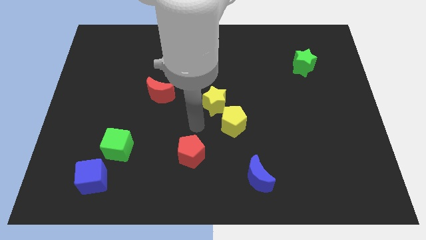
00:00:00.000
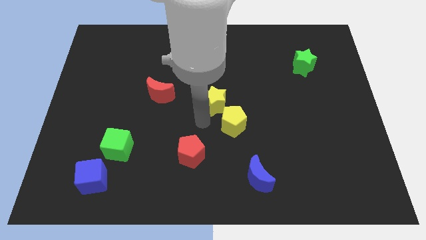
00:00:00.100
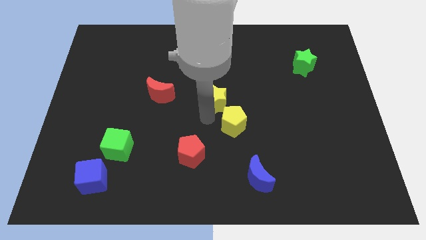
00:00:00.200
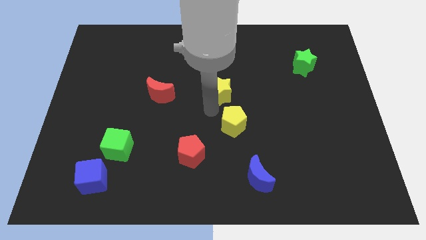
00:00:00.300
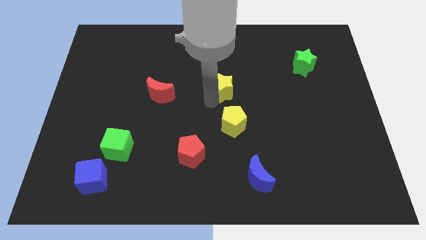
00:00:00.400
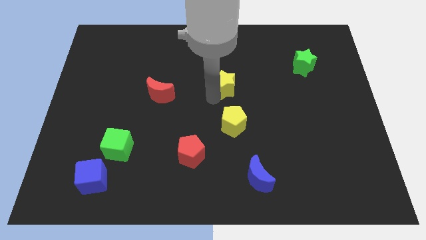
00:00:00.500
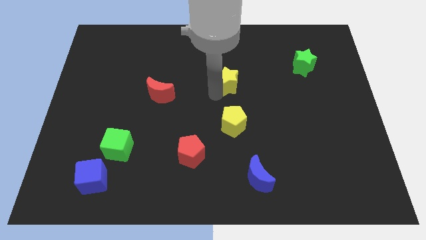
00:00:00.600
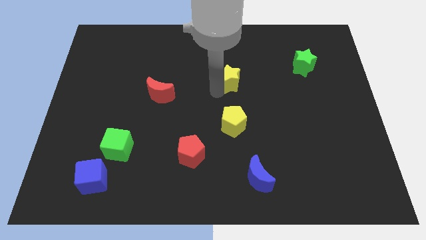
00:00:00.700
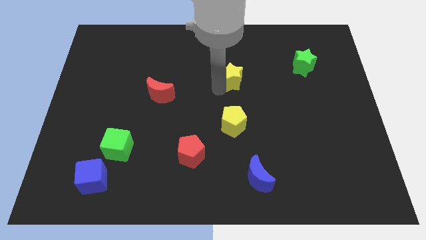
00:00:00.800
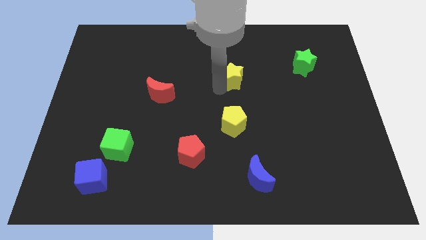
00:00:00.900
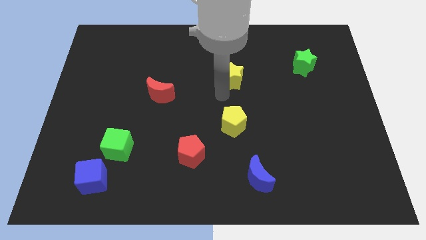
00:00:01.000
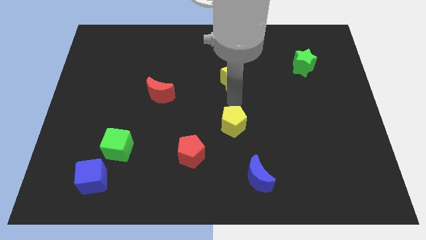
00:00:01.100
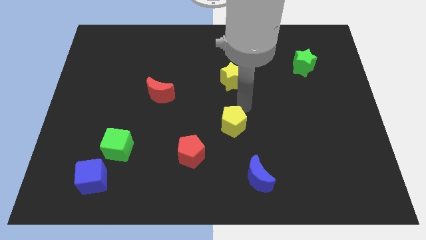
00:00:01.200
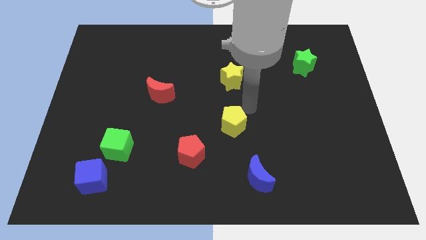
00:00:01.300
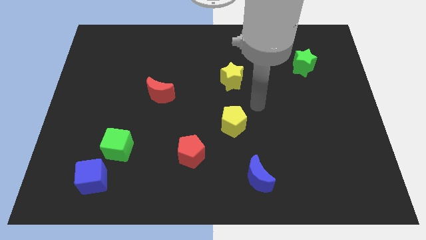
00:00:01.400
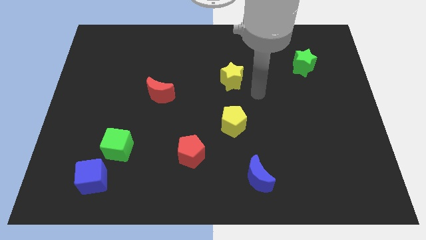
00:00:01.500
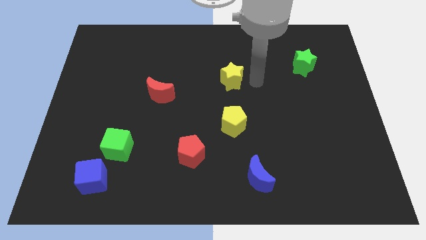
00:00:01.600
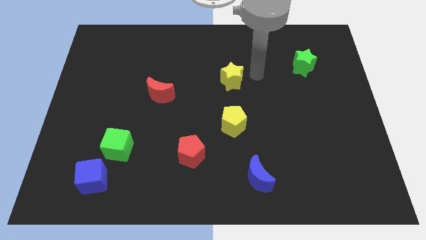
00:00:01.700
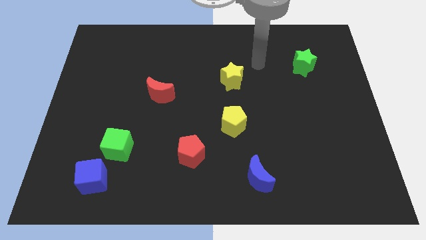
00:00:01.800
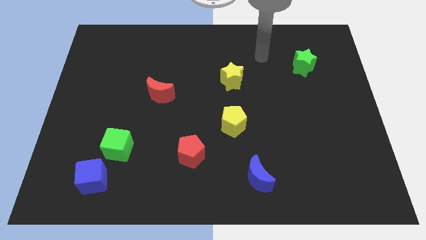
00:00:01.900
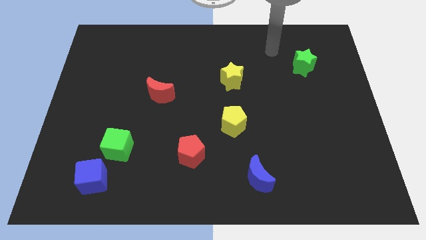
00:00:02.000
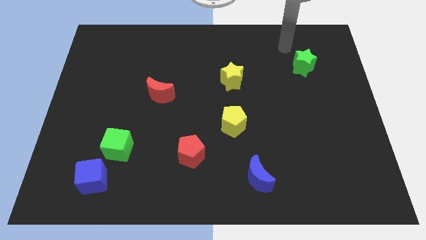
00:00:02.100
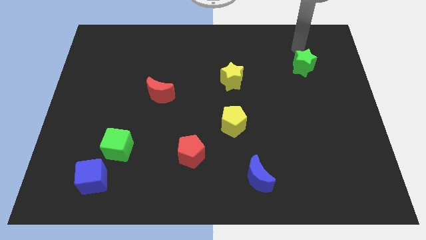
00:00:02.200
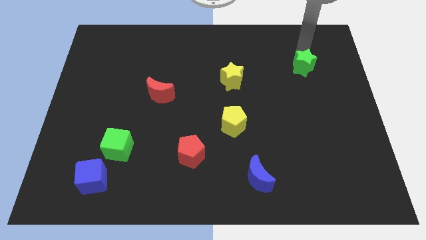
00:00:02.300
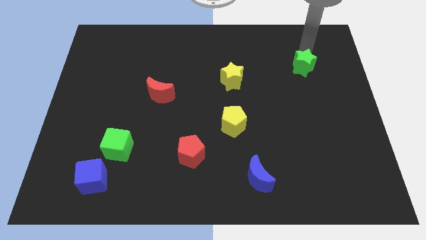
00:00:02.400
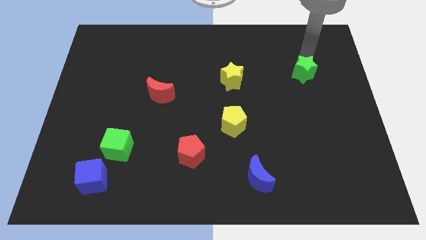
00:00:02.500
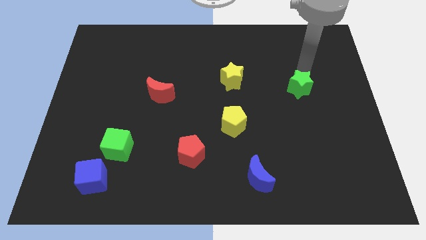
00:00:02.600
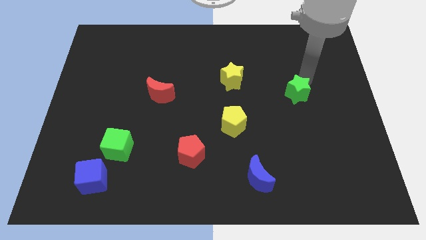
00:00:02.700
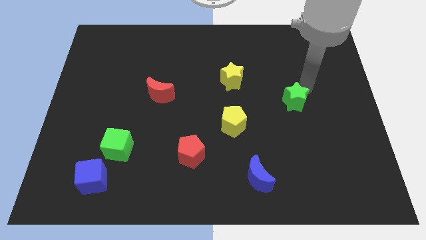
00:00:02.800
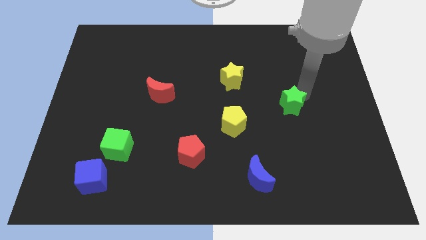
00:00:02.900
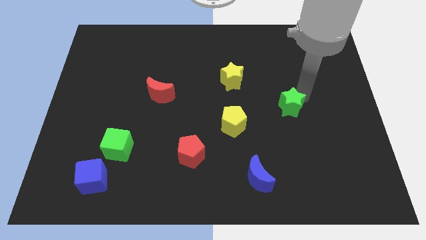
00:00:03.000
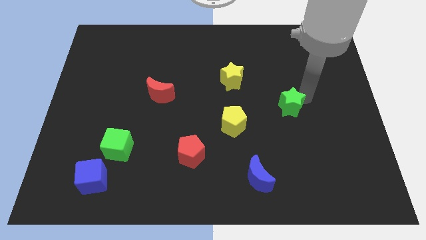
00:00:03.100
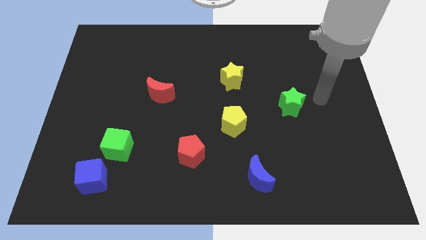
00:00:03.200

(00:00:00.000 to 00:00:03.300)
push the green star towards the bottom

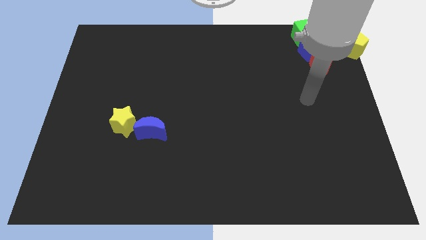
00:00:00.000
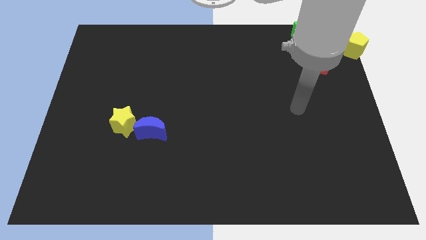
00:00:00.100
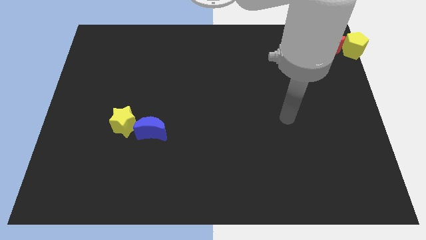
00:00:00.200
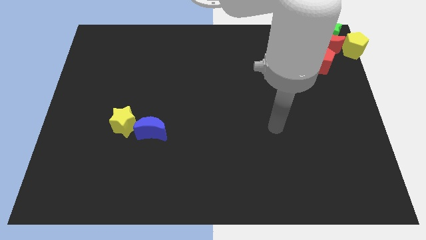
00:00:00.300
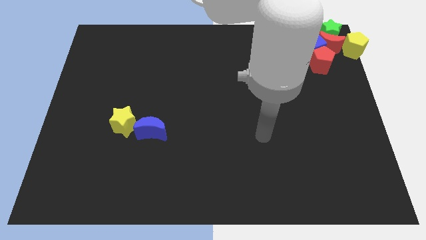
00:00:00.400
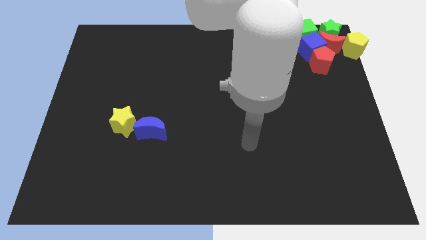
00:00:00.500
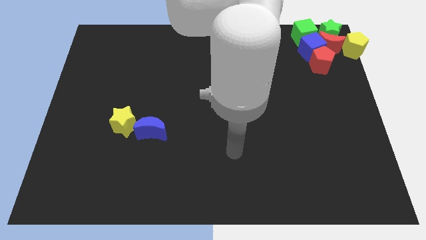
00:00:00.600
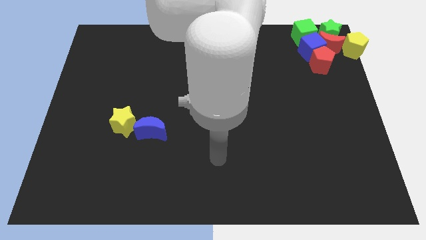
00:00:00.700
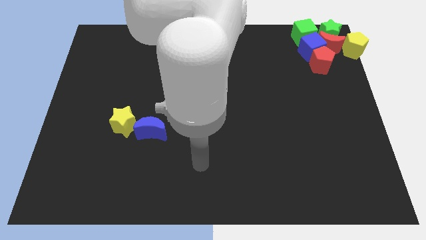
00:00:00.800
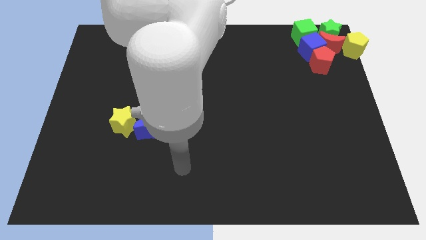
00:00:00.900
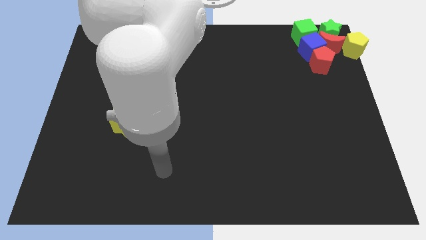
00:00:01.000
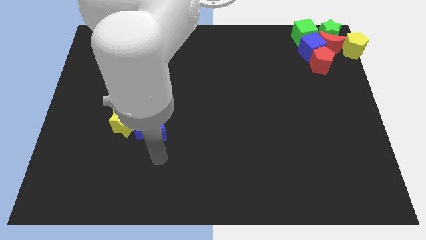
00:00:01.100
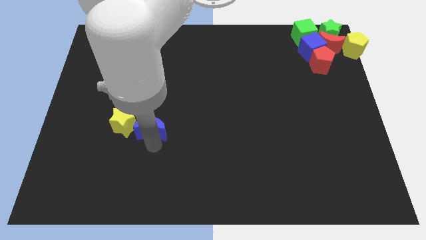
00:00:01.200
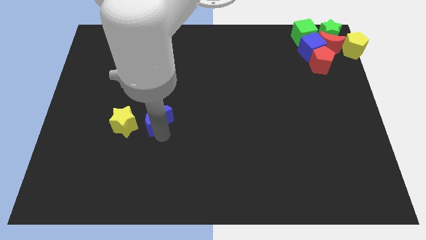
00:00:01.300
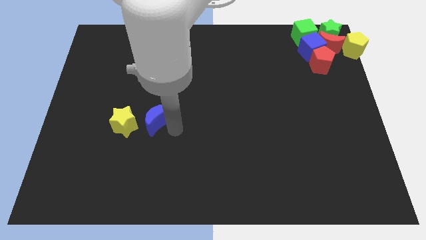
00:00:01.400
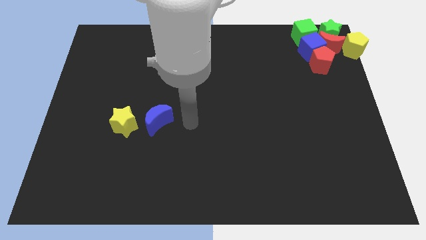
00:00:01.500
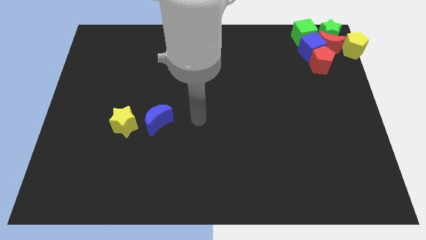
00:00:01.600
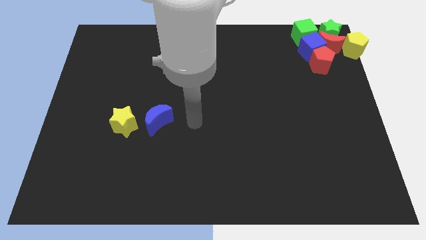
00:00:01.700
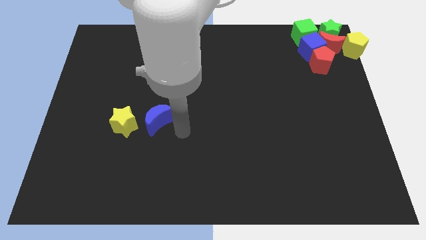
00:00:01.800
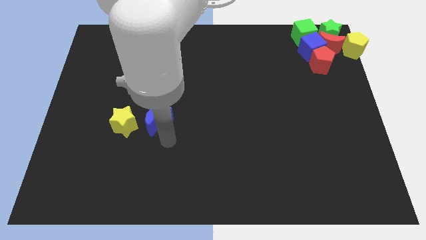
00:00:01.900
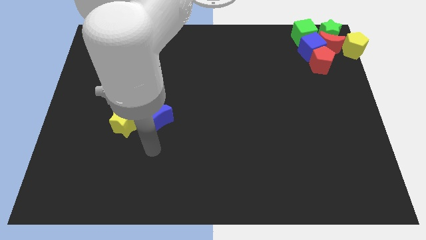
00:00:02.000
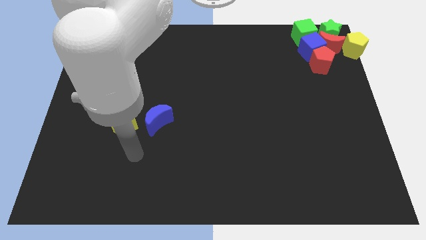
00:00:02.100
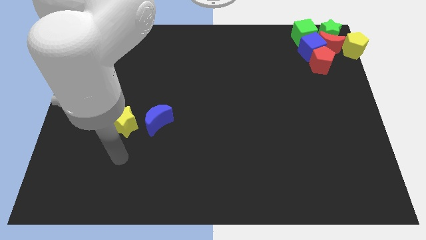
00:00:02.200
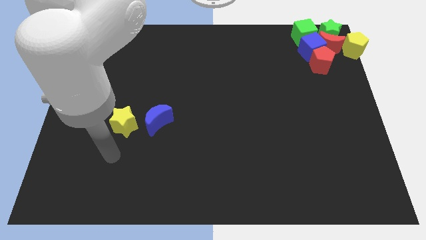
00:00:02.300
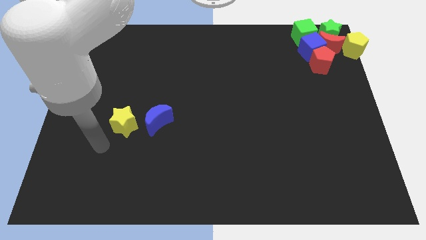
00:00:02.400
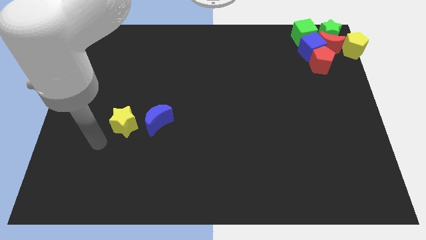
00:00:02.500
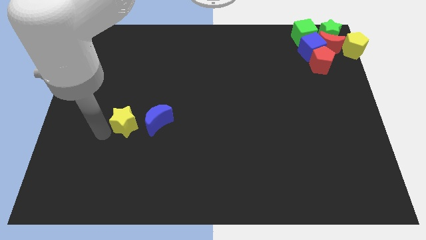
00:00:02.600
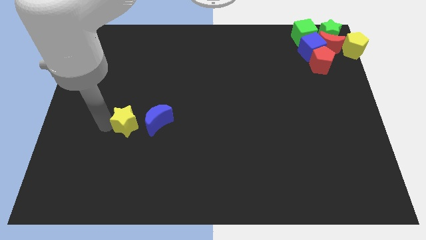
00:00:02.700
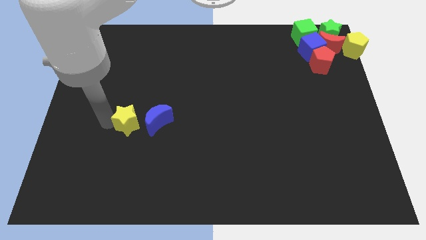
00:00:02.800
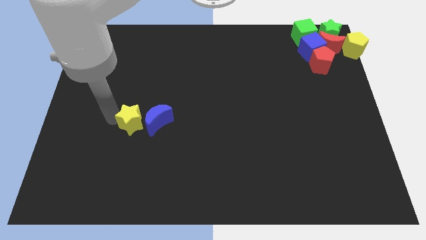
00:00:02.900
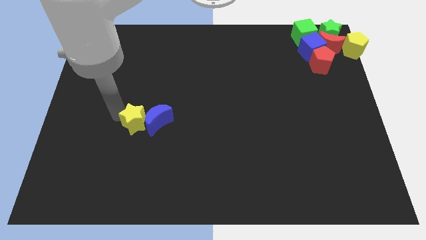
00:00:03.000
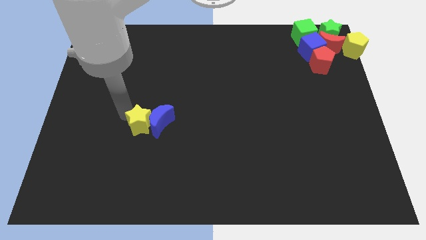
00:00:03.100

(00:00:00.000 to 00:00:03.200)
move the blue moon slightly towards center of the board

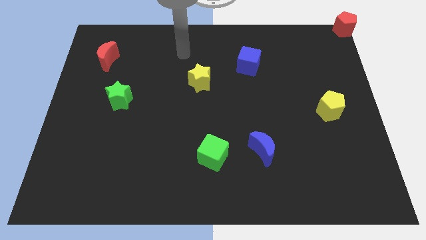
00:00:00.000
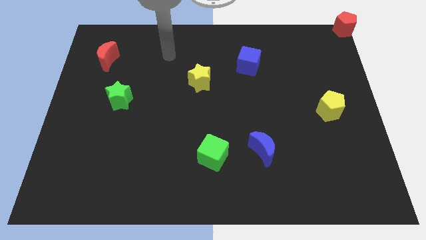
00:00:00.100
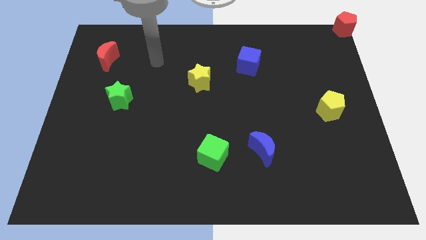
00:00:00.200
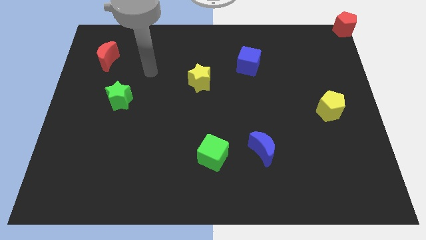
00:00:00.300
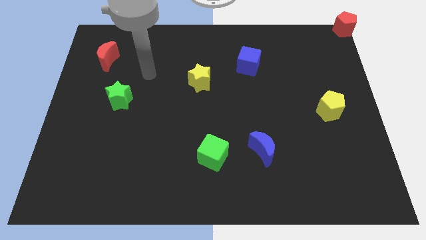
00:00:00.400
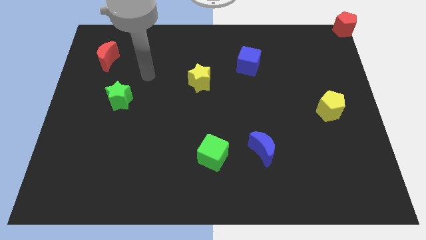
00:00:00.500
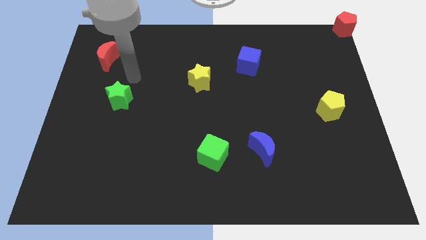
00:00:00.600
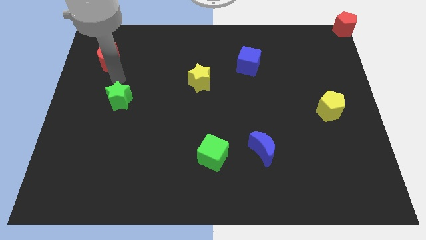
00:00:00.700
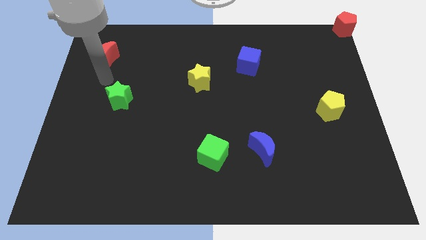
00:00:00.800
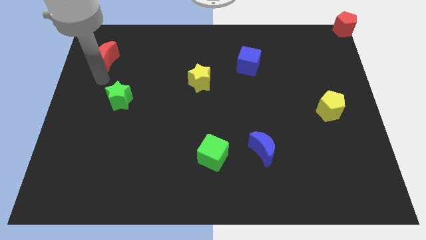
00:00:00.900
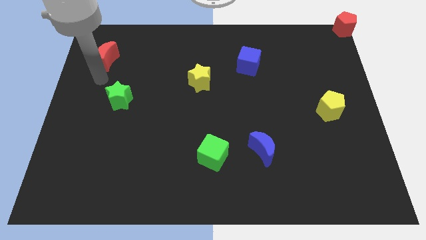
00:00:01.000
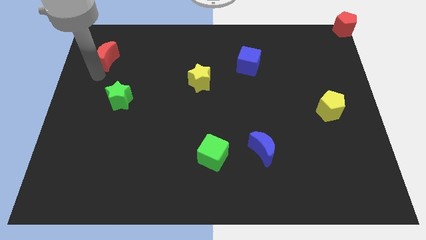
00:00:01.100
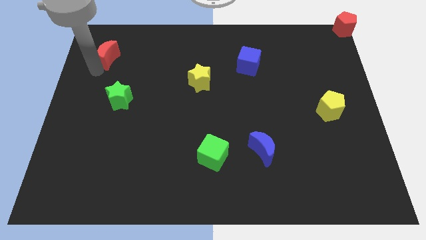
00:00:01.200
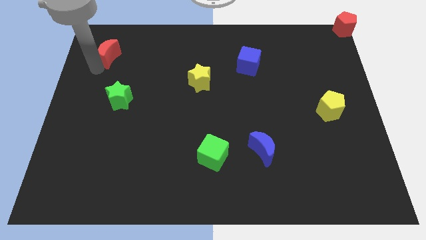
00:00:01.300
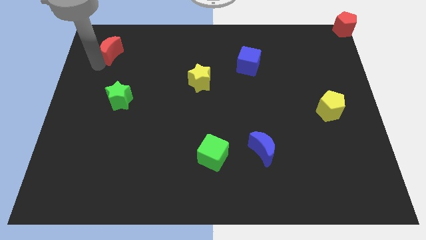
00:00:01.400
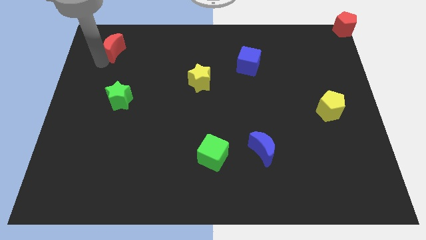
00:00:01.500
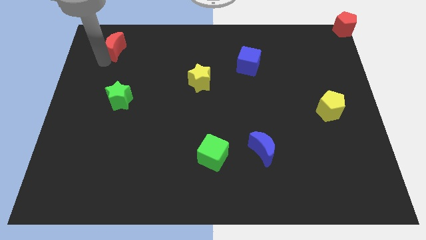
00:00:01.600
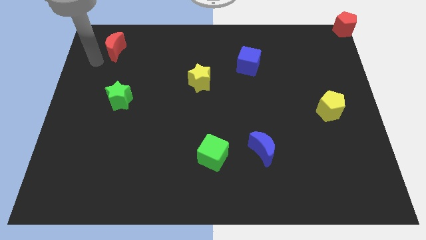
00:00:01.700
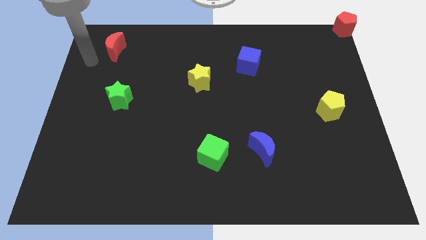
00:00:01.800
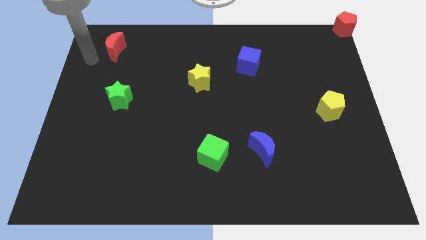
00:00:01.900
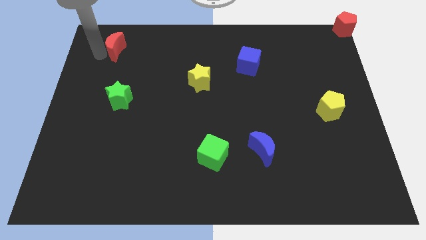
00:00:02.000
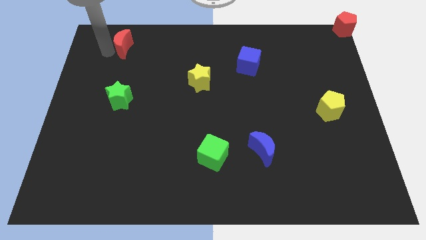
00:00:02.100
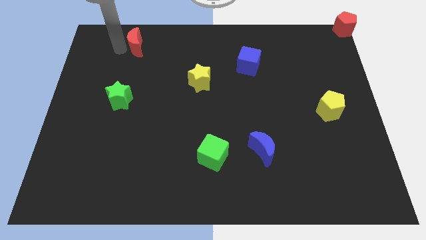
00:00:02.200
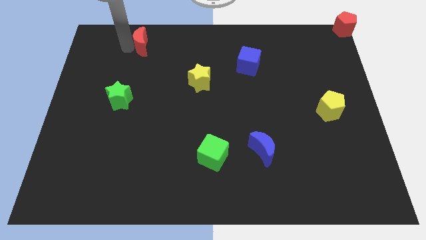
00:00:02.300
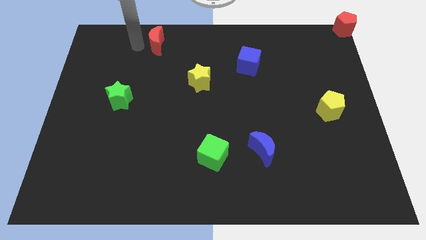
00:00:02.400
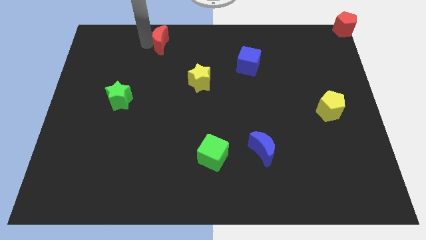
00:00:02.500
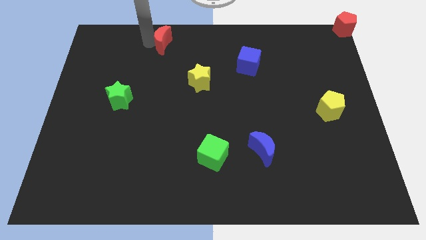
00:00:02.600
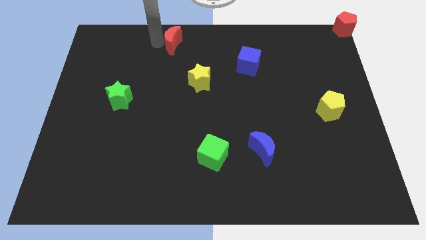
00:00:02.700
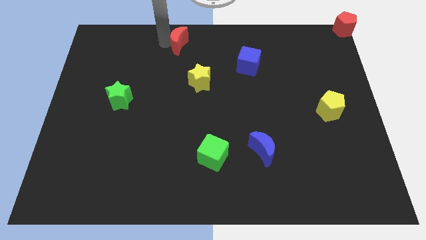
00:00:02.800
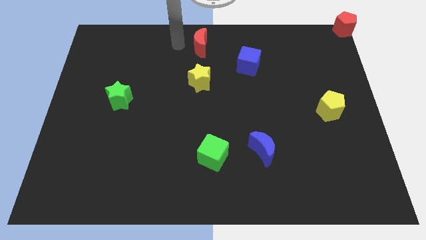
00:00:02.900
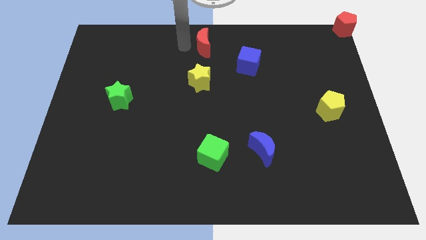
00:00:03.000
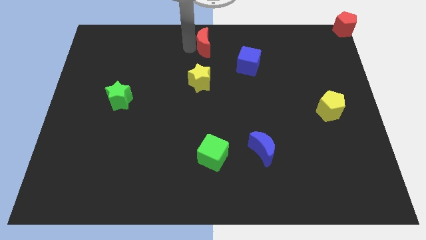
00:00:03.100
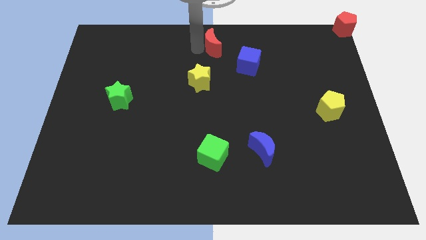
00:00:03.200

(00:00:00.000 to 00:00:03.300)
push the red crescent to the top center of the board
